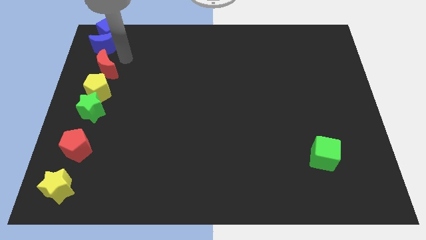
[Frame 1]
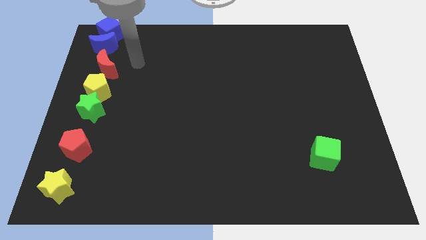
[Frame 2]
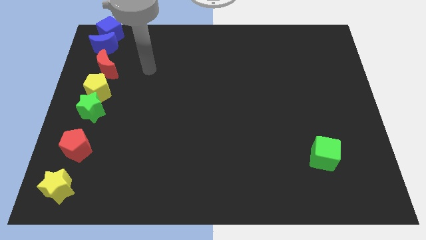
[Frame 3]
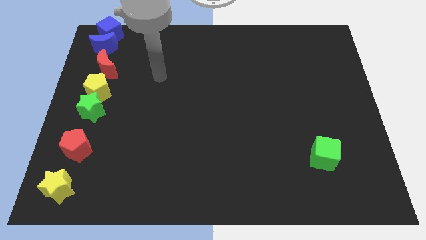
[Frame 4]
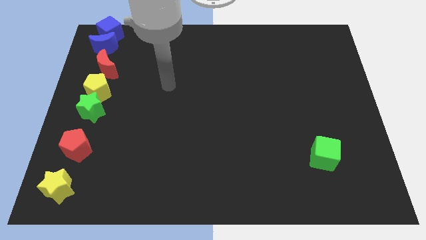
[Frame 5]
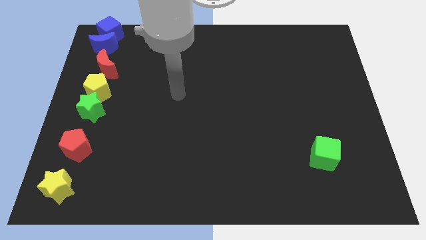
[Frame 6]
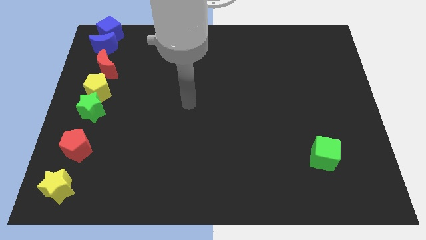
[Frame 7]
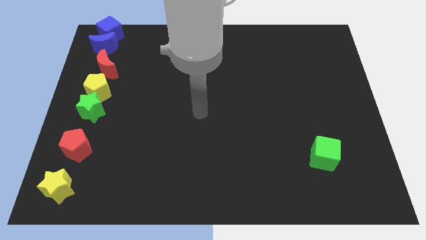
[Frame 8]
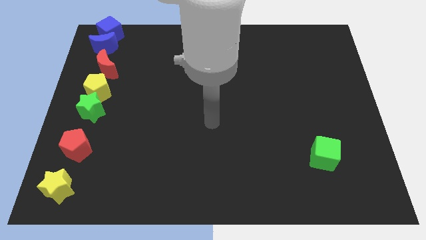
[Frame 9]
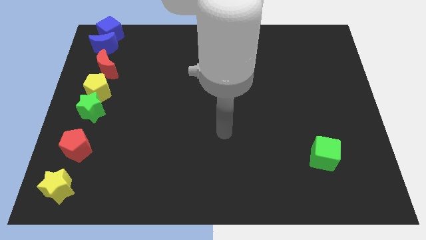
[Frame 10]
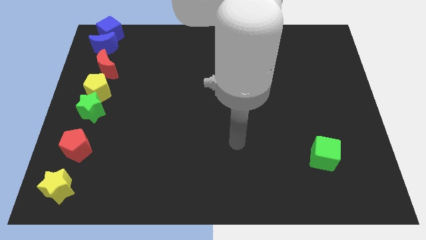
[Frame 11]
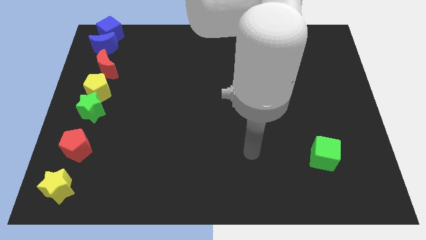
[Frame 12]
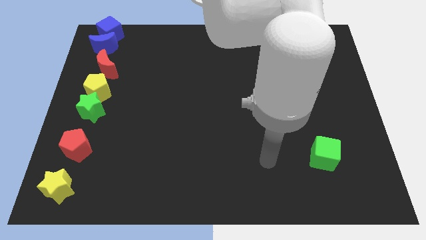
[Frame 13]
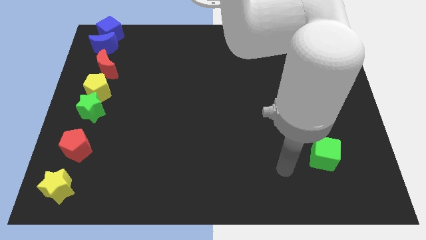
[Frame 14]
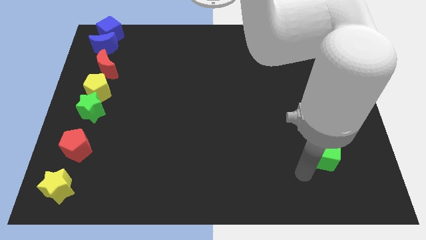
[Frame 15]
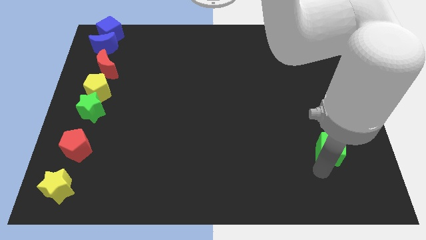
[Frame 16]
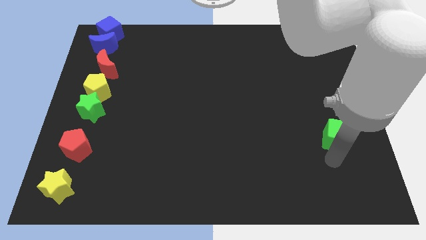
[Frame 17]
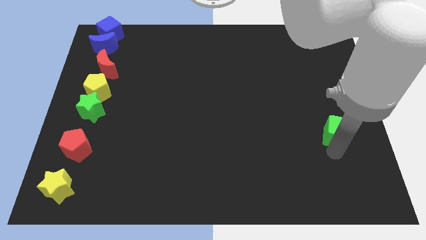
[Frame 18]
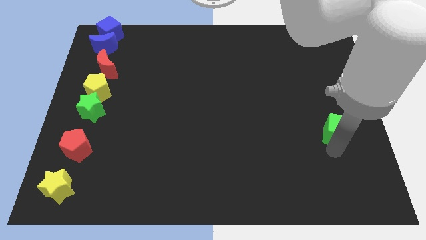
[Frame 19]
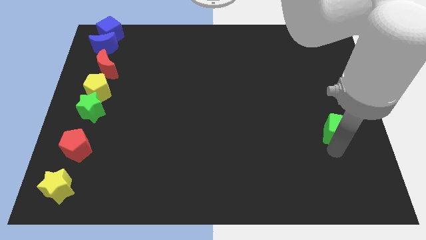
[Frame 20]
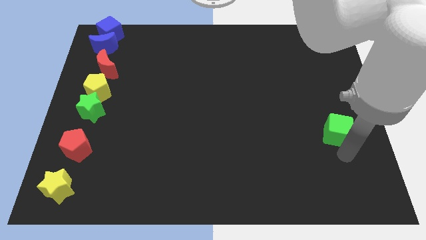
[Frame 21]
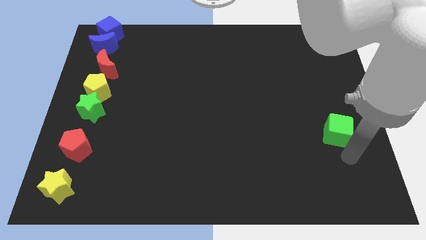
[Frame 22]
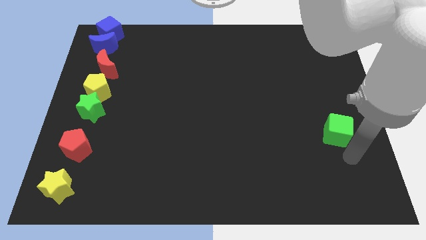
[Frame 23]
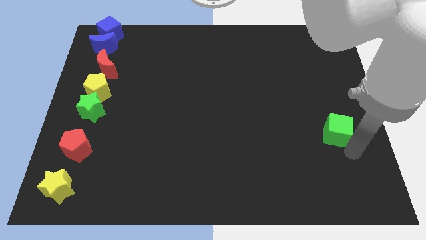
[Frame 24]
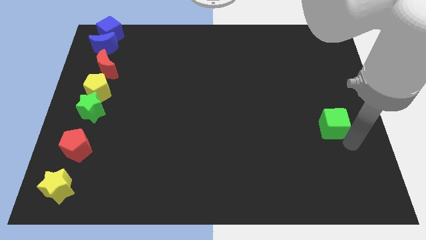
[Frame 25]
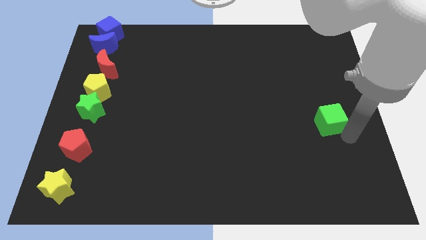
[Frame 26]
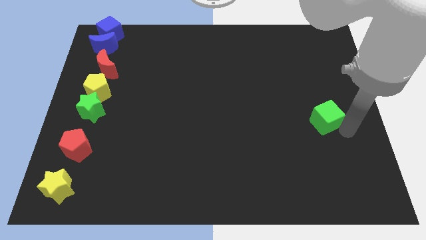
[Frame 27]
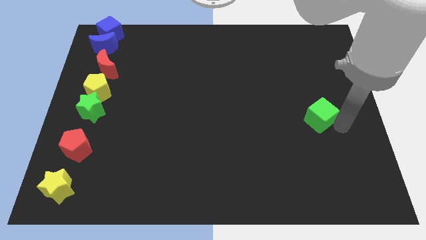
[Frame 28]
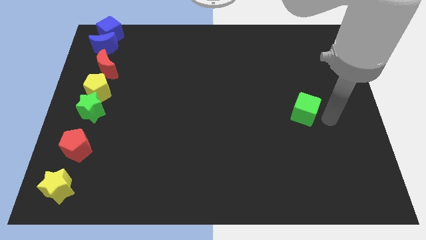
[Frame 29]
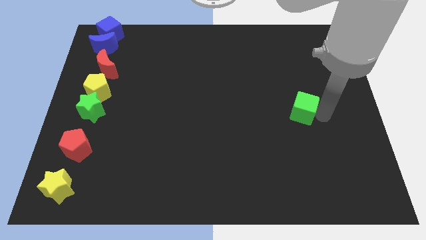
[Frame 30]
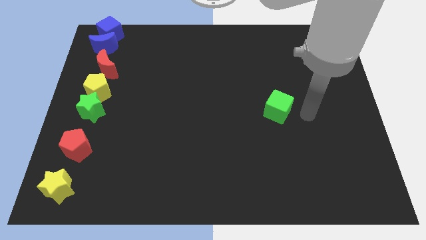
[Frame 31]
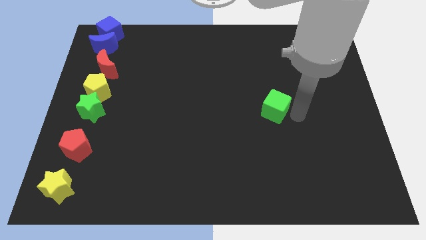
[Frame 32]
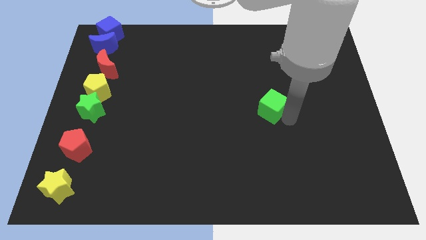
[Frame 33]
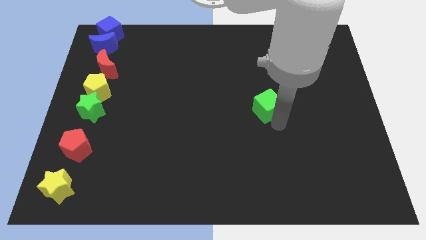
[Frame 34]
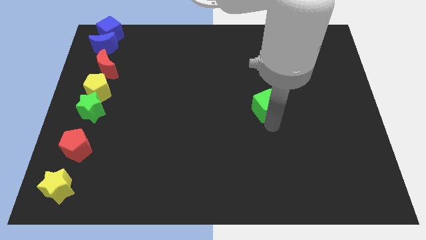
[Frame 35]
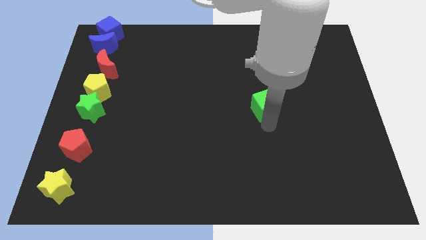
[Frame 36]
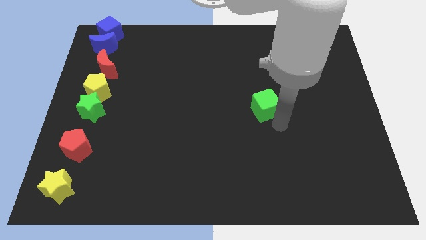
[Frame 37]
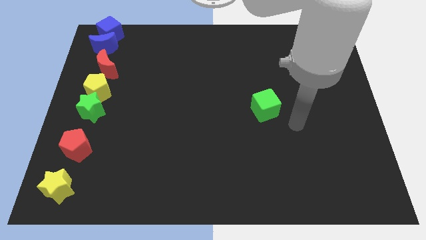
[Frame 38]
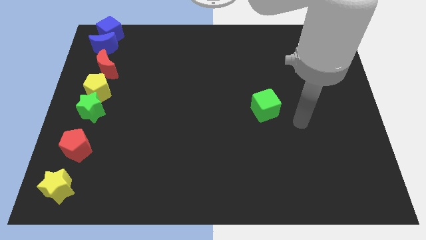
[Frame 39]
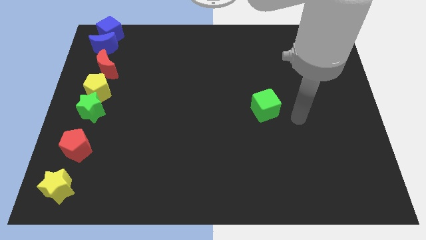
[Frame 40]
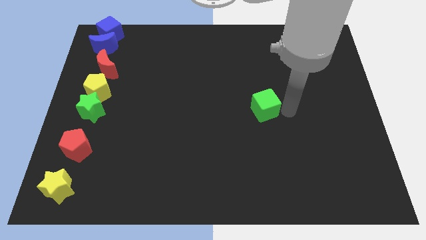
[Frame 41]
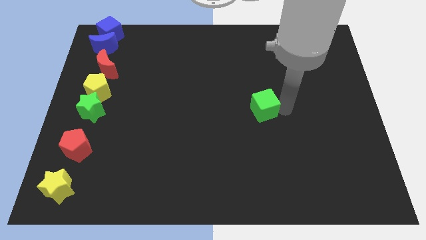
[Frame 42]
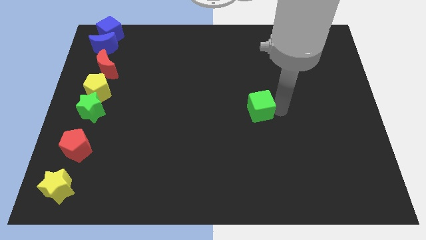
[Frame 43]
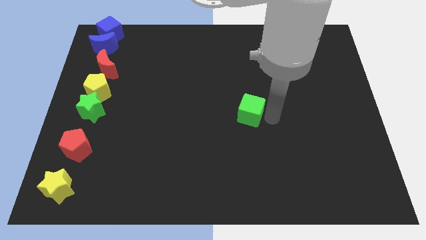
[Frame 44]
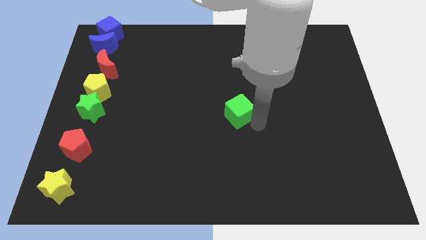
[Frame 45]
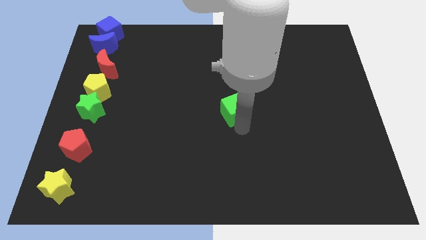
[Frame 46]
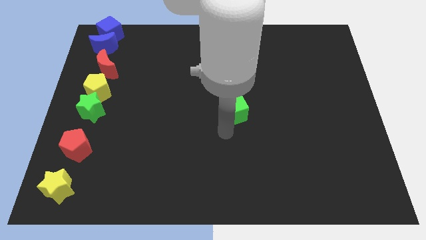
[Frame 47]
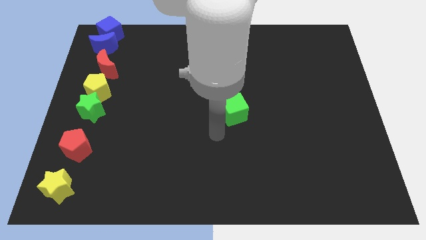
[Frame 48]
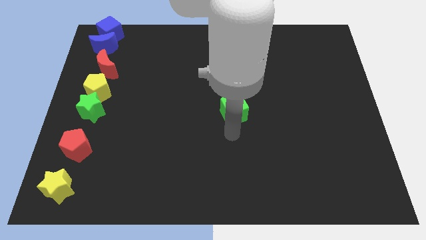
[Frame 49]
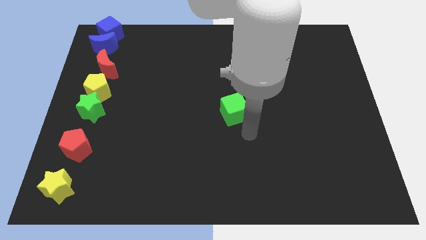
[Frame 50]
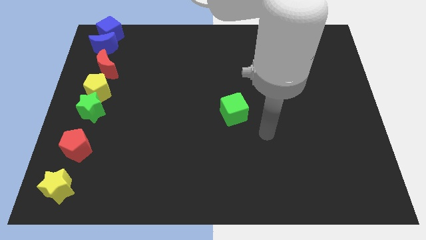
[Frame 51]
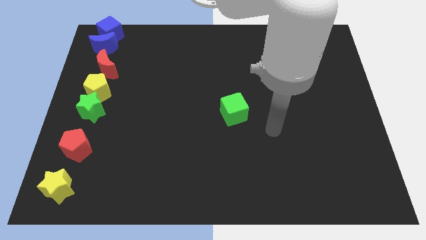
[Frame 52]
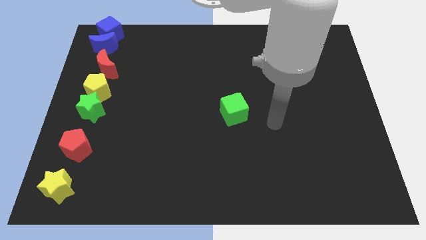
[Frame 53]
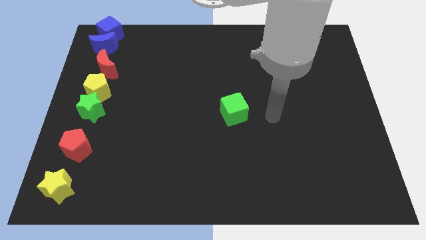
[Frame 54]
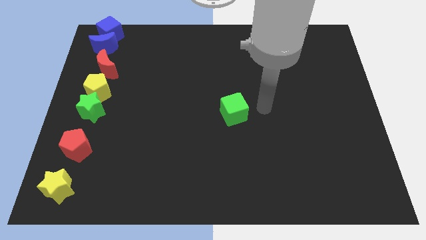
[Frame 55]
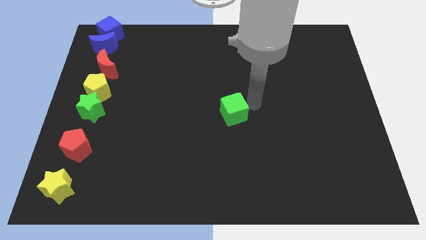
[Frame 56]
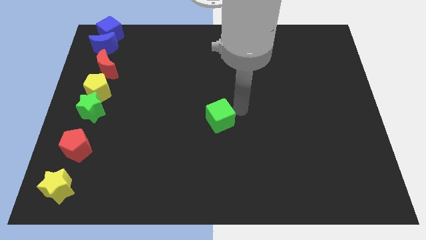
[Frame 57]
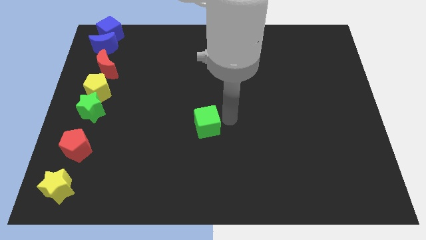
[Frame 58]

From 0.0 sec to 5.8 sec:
move the green cube to the center of the board

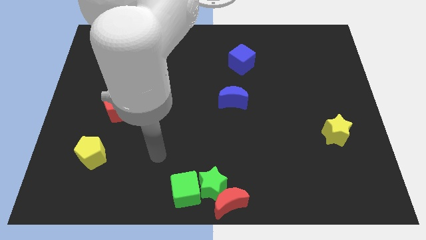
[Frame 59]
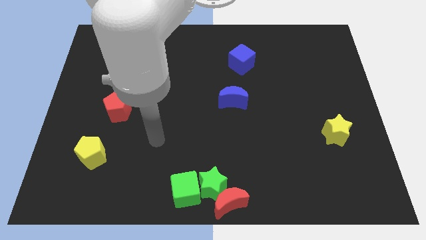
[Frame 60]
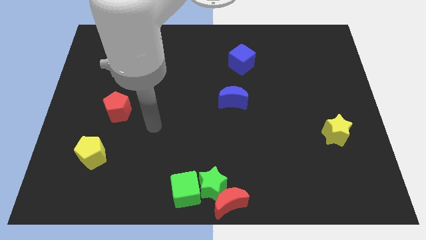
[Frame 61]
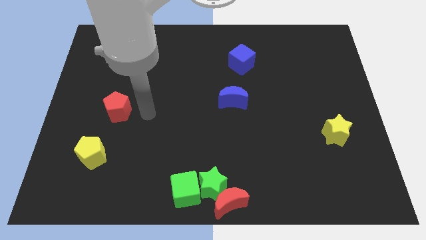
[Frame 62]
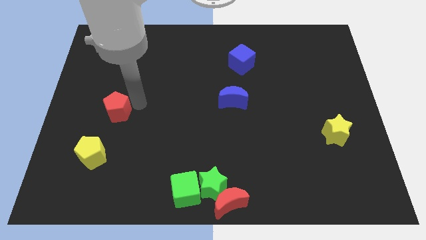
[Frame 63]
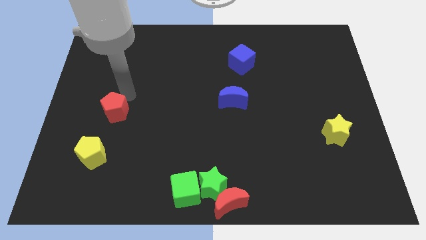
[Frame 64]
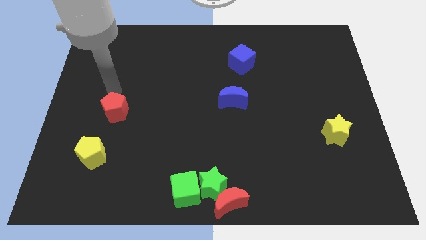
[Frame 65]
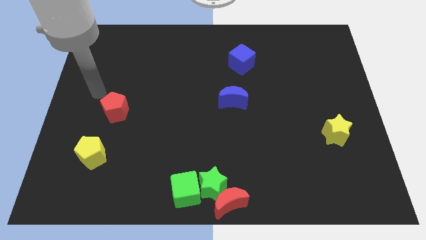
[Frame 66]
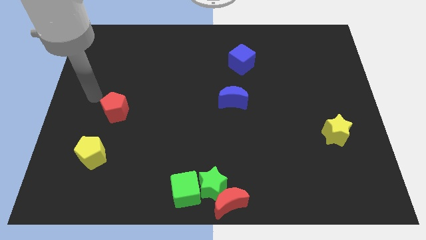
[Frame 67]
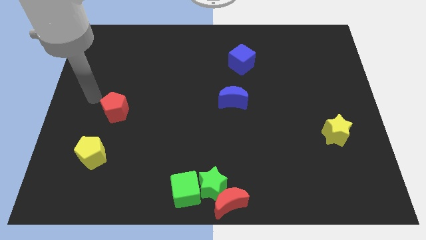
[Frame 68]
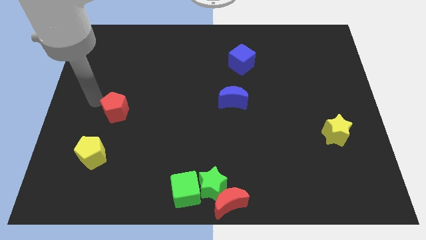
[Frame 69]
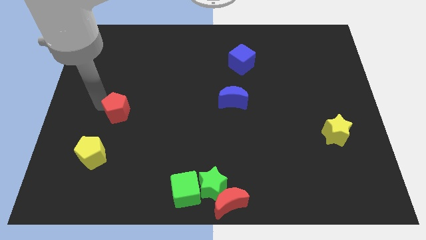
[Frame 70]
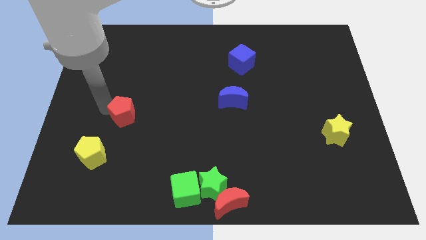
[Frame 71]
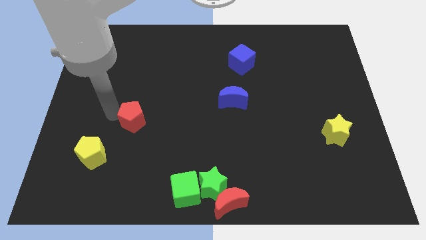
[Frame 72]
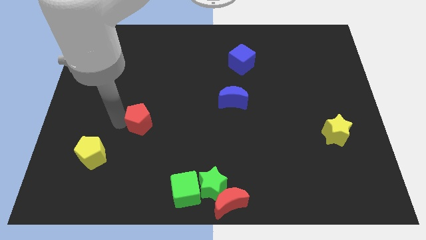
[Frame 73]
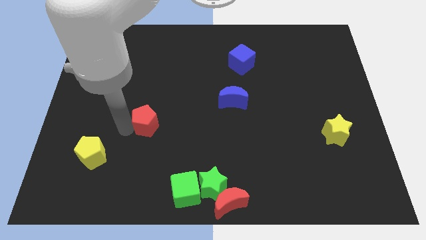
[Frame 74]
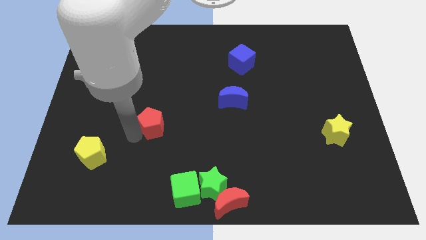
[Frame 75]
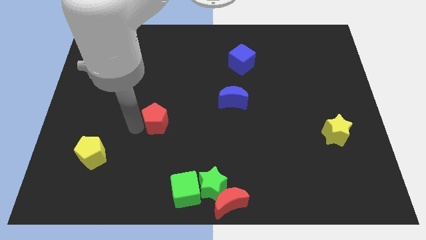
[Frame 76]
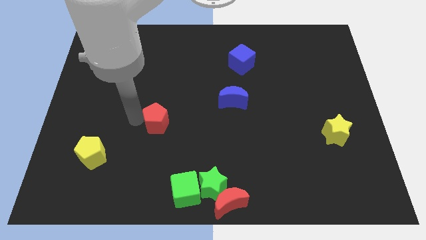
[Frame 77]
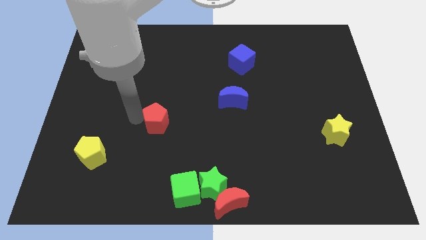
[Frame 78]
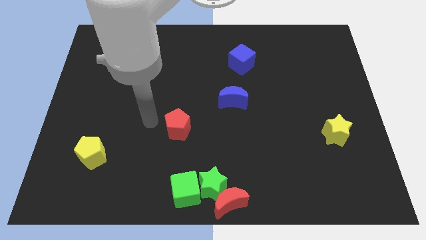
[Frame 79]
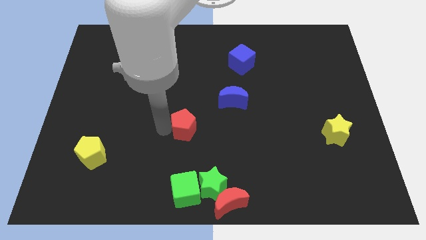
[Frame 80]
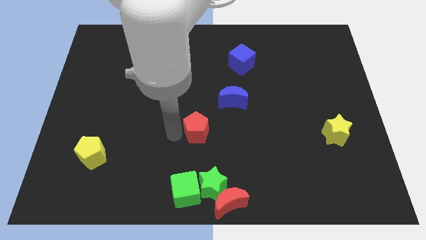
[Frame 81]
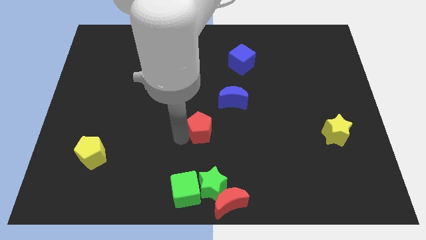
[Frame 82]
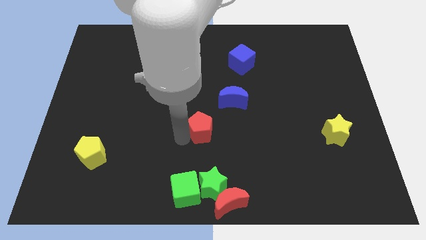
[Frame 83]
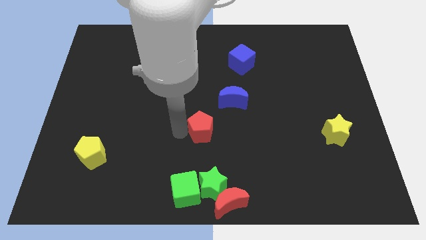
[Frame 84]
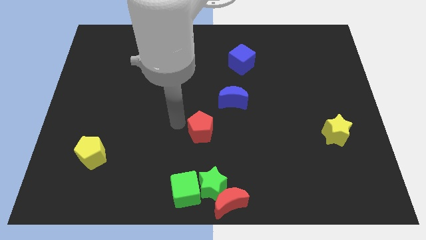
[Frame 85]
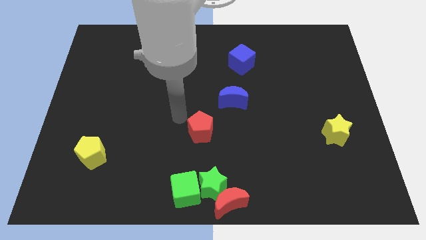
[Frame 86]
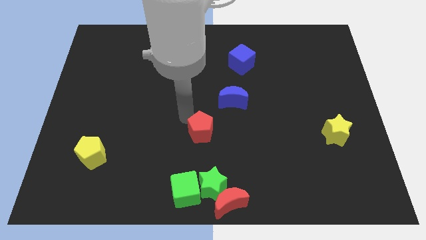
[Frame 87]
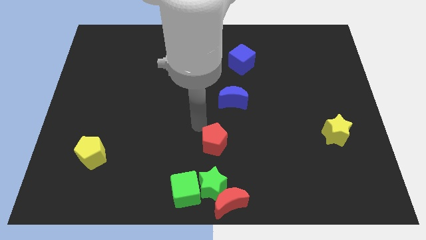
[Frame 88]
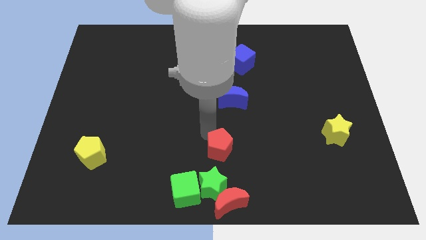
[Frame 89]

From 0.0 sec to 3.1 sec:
put the red pentagon vertically above the green star

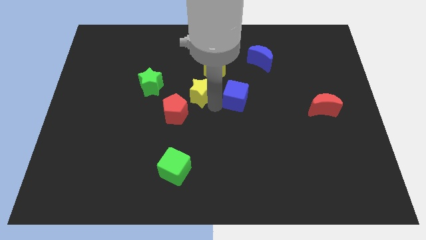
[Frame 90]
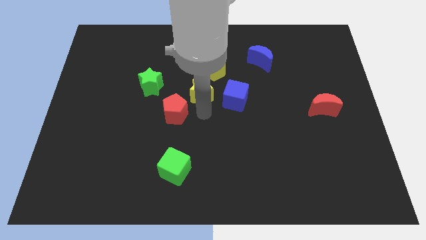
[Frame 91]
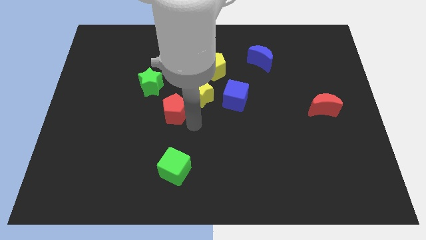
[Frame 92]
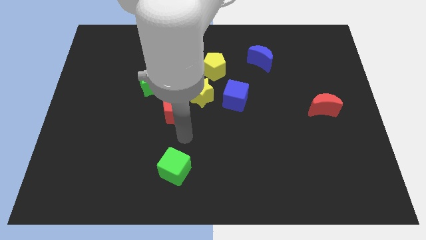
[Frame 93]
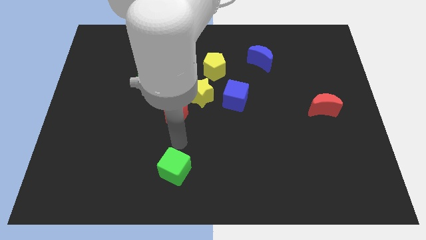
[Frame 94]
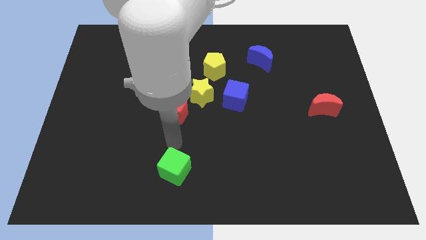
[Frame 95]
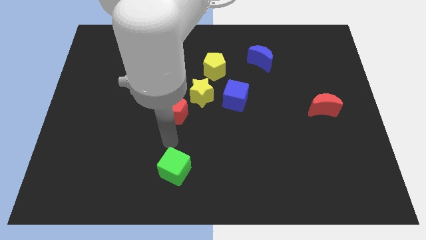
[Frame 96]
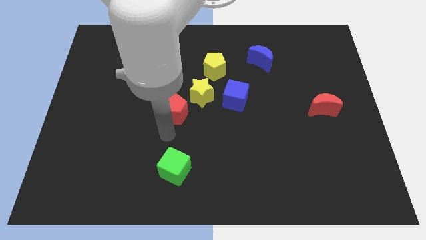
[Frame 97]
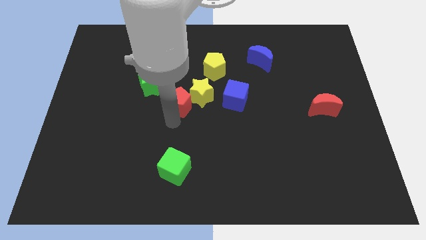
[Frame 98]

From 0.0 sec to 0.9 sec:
point your arm at the top of the green cube
